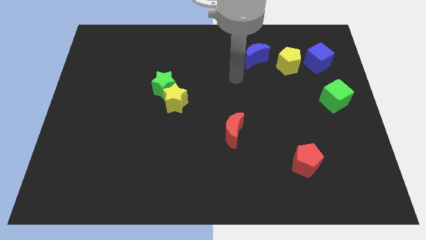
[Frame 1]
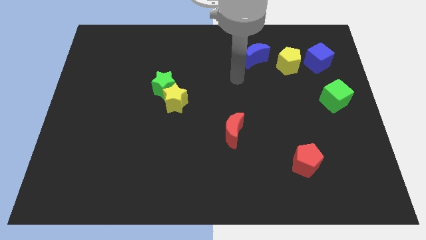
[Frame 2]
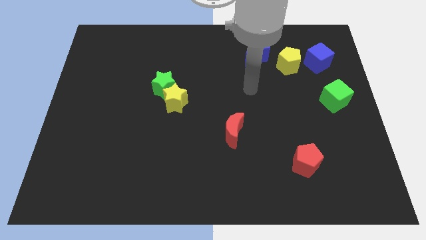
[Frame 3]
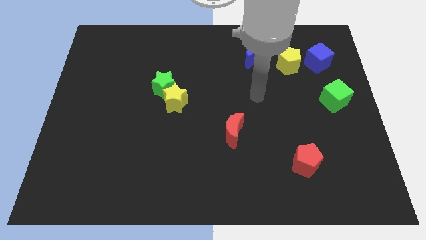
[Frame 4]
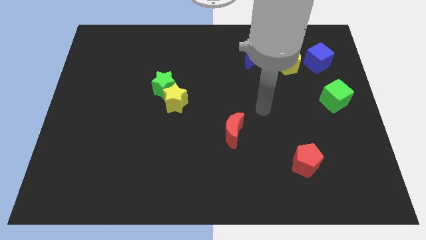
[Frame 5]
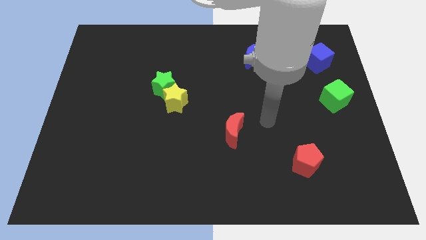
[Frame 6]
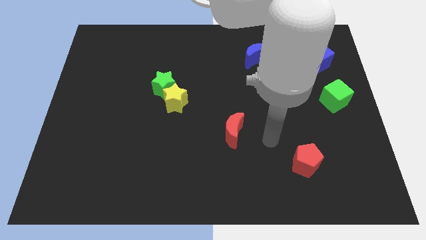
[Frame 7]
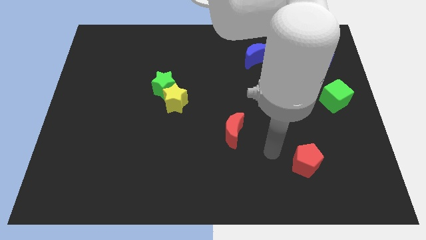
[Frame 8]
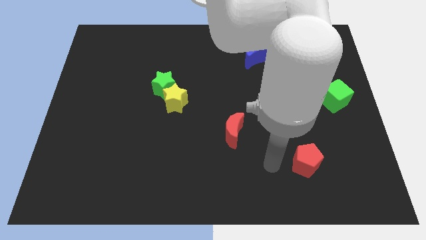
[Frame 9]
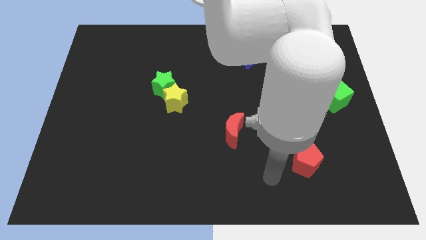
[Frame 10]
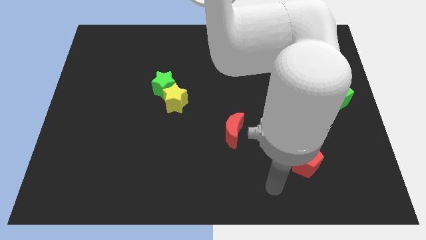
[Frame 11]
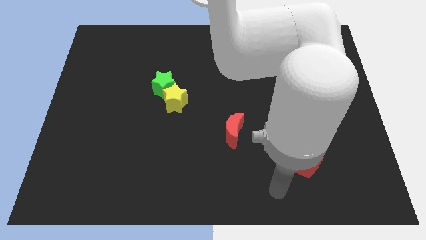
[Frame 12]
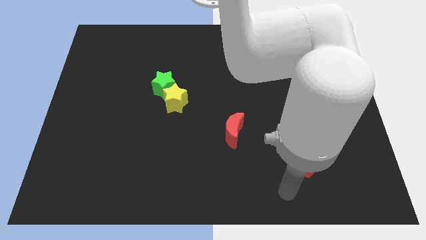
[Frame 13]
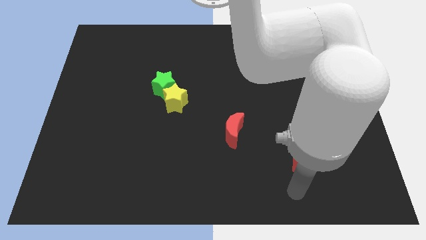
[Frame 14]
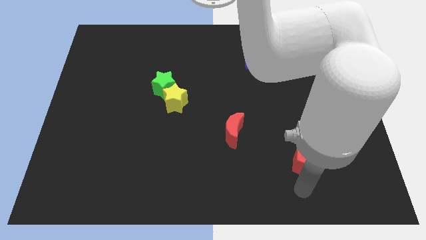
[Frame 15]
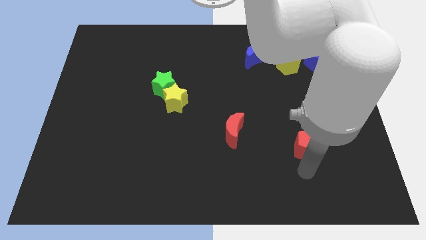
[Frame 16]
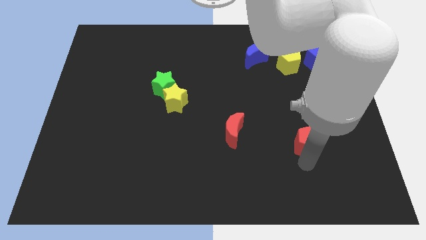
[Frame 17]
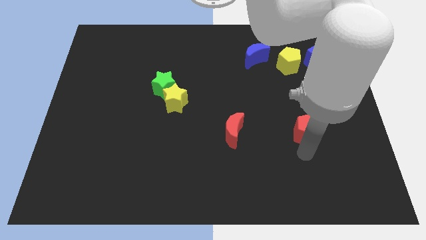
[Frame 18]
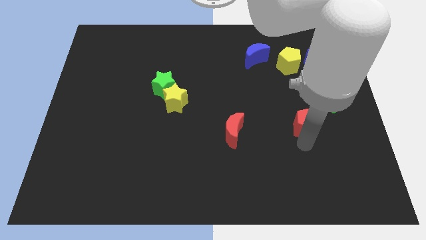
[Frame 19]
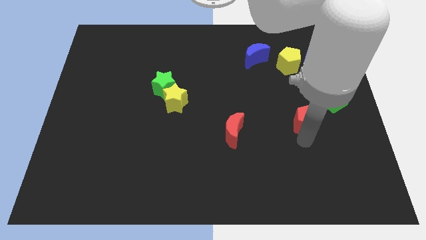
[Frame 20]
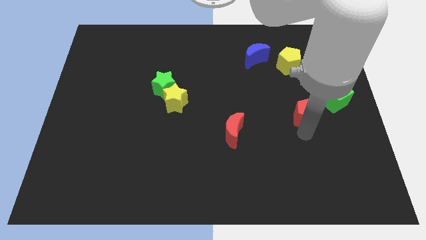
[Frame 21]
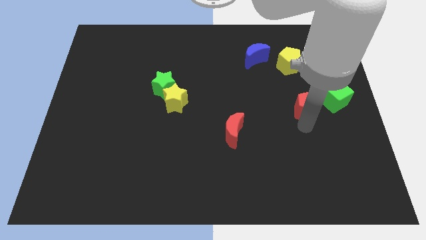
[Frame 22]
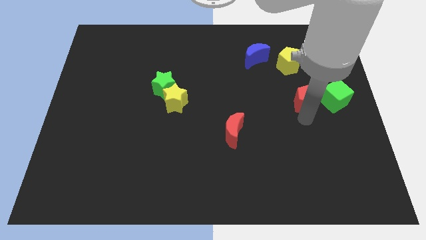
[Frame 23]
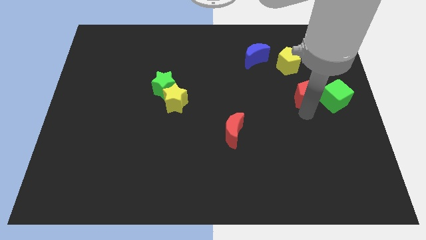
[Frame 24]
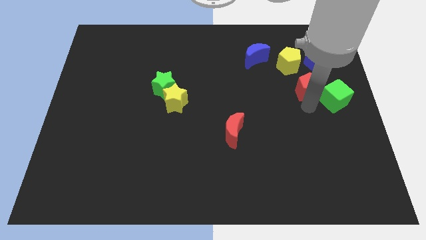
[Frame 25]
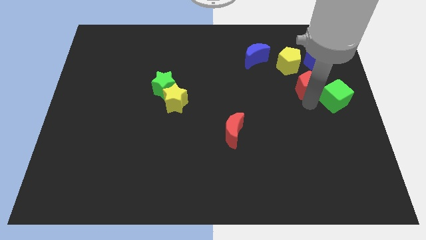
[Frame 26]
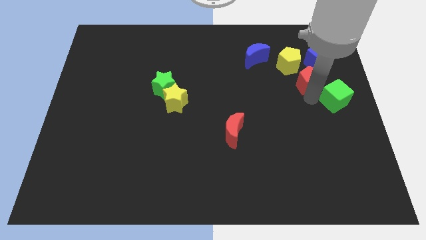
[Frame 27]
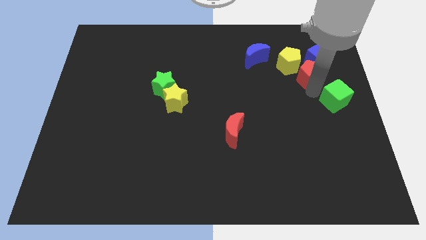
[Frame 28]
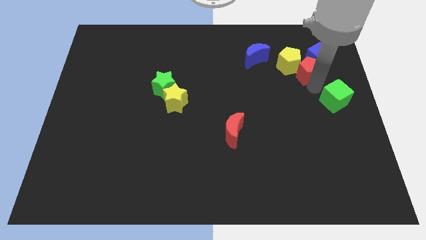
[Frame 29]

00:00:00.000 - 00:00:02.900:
put the red pentagon towards the blue cube

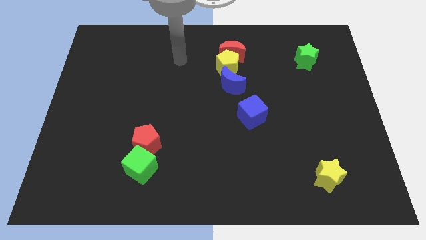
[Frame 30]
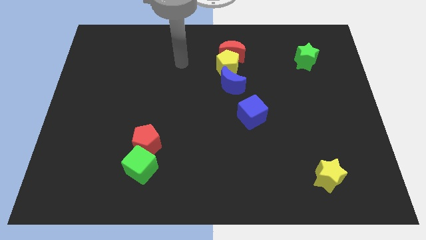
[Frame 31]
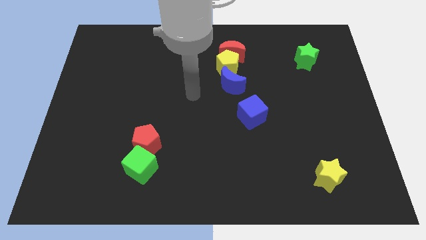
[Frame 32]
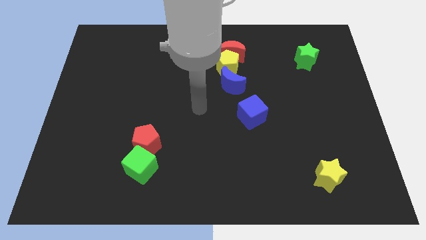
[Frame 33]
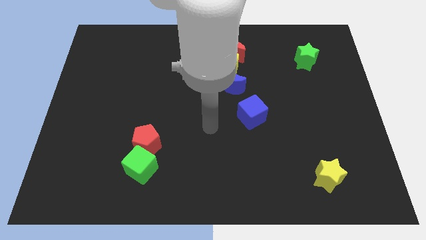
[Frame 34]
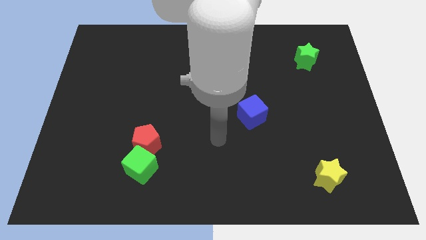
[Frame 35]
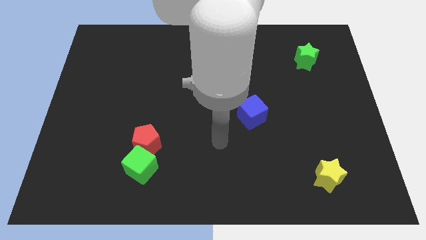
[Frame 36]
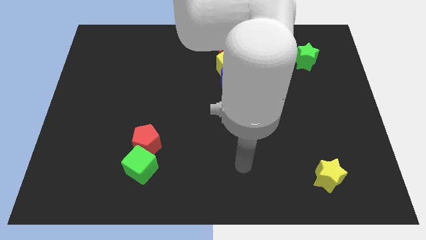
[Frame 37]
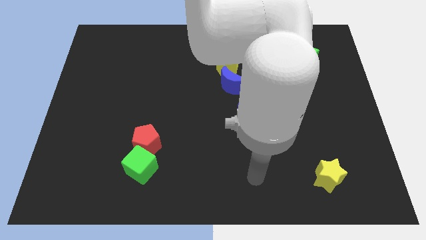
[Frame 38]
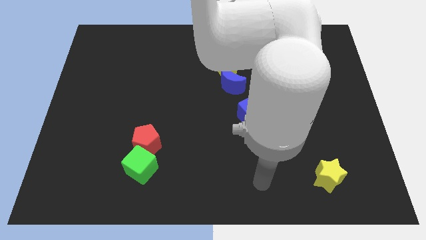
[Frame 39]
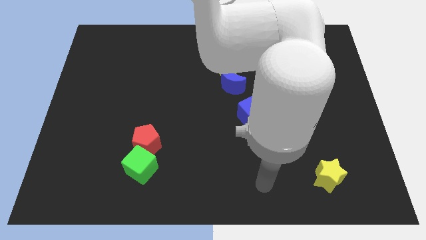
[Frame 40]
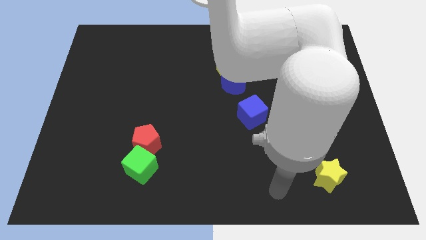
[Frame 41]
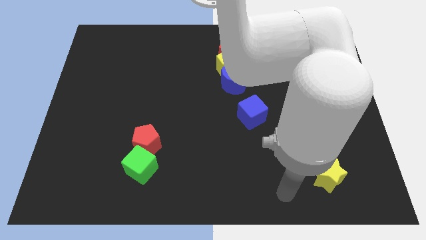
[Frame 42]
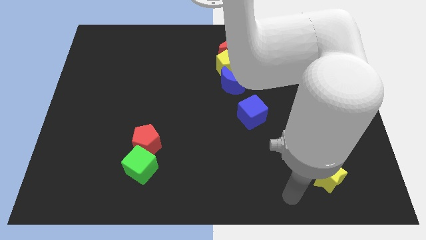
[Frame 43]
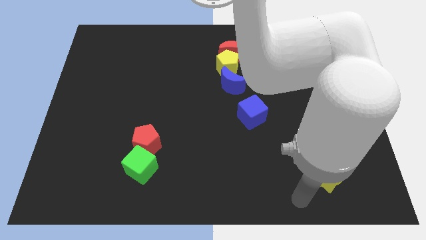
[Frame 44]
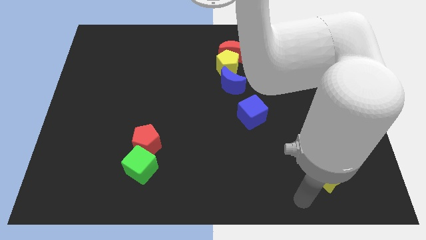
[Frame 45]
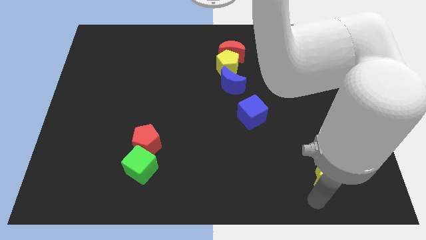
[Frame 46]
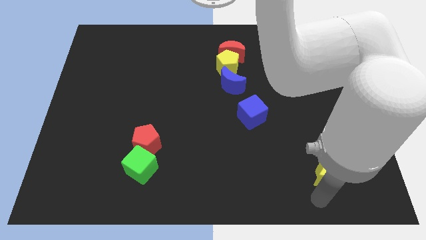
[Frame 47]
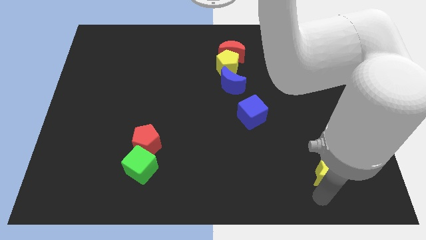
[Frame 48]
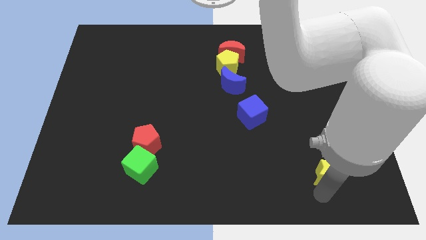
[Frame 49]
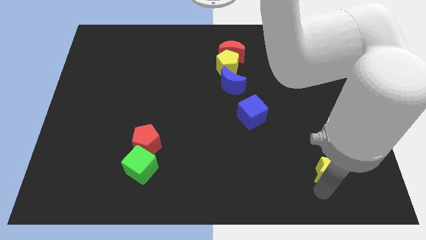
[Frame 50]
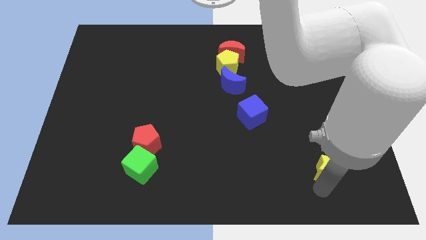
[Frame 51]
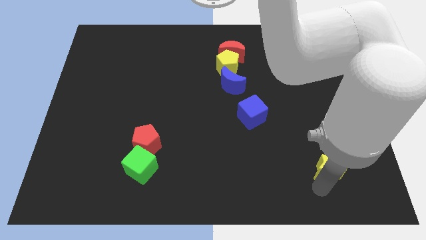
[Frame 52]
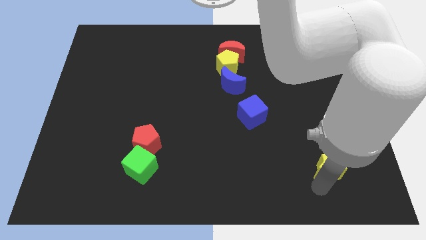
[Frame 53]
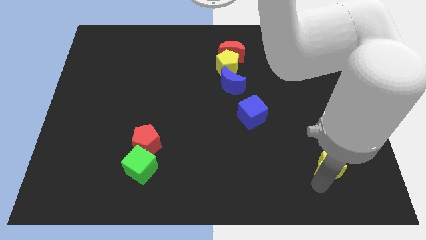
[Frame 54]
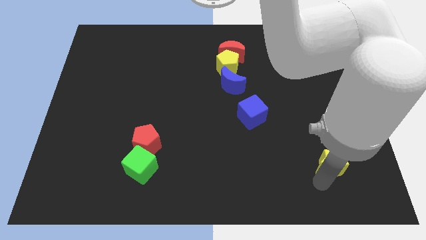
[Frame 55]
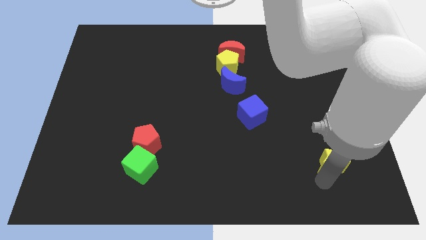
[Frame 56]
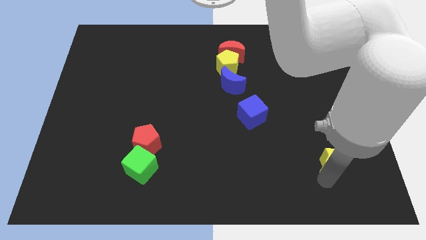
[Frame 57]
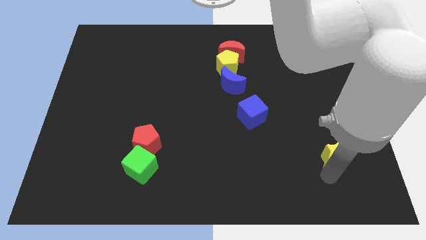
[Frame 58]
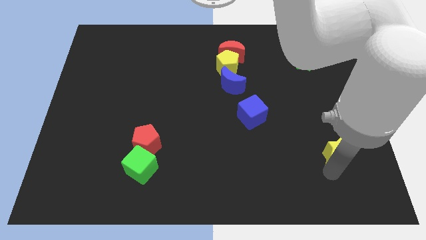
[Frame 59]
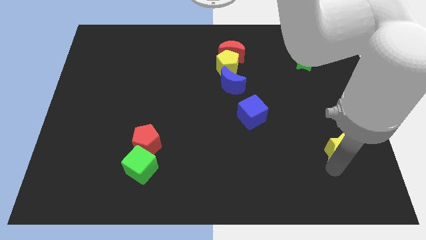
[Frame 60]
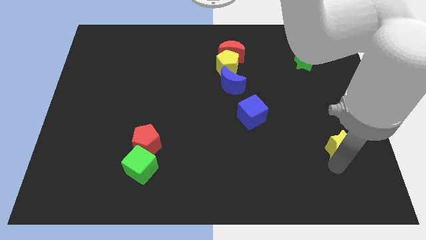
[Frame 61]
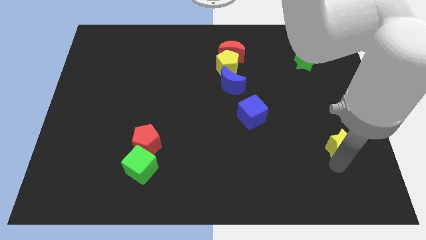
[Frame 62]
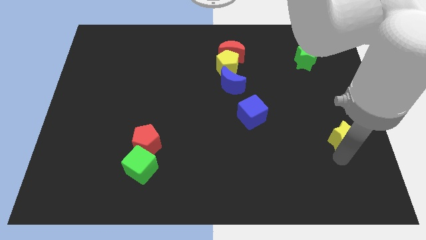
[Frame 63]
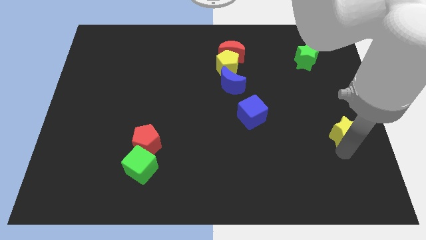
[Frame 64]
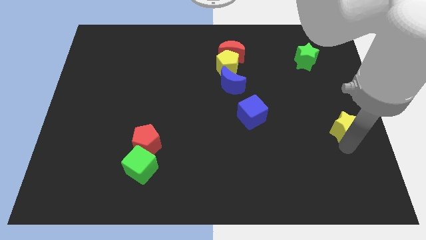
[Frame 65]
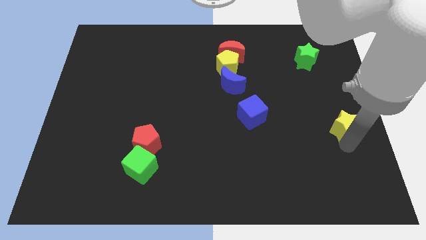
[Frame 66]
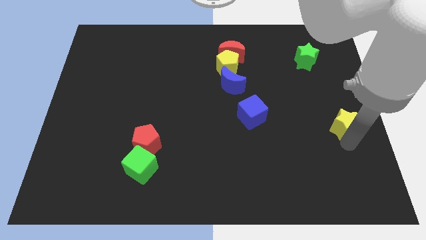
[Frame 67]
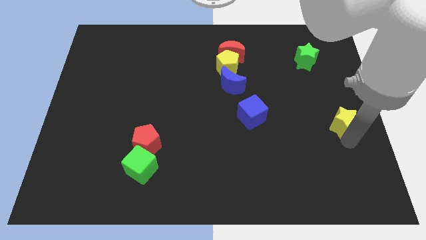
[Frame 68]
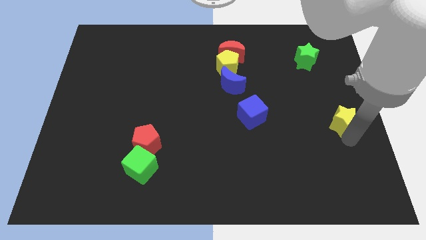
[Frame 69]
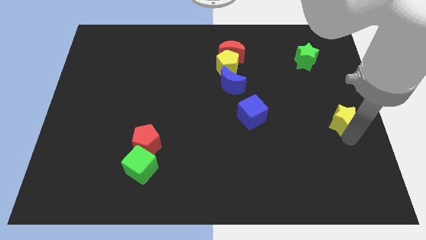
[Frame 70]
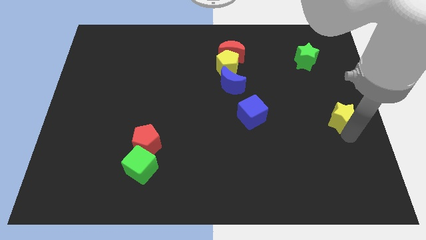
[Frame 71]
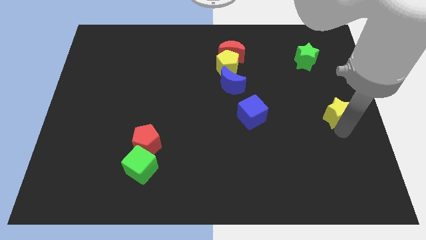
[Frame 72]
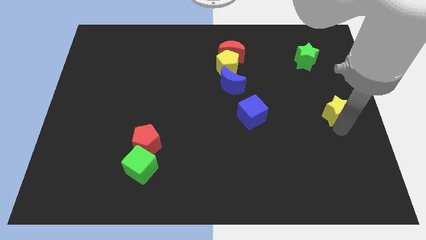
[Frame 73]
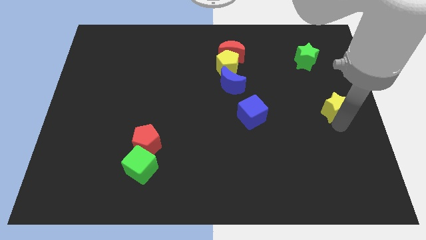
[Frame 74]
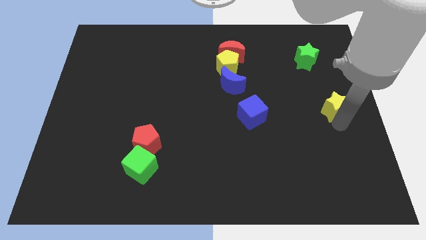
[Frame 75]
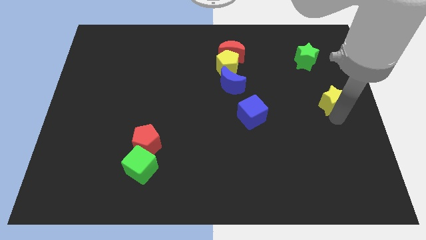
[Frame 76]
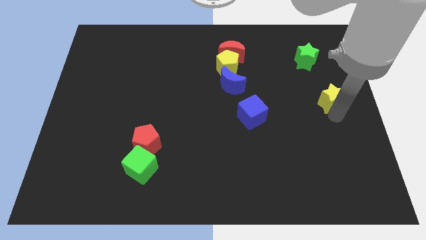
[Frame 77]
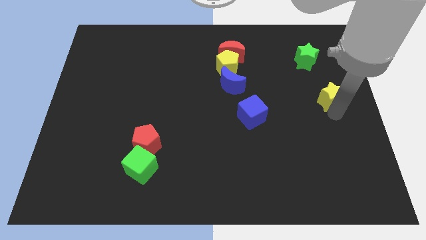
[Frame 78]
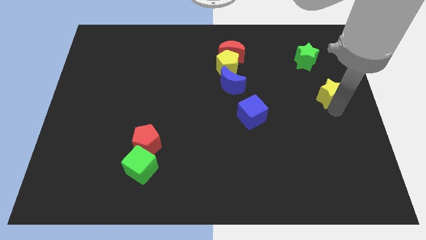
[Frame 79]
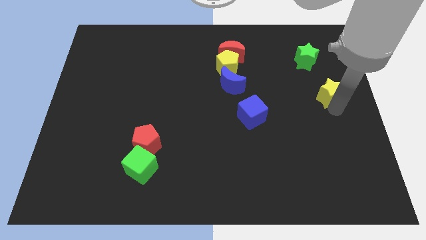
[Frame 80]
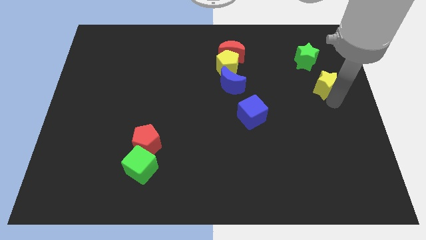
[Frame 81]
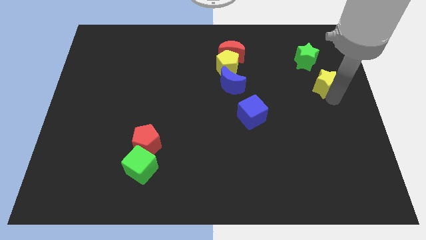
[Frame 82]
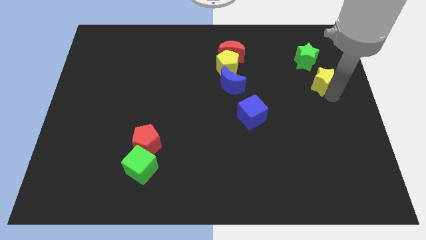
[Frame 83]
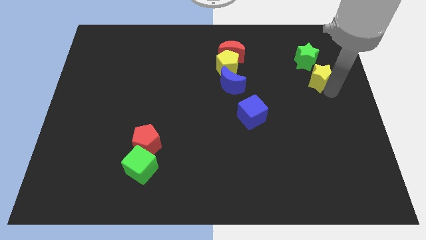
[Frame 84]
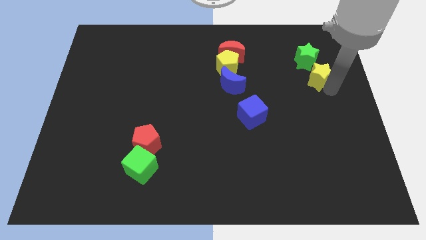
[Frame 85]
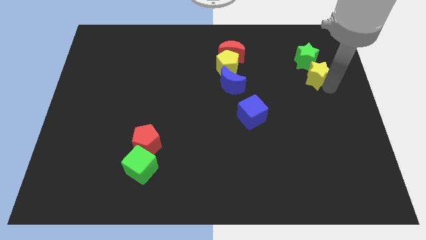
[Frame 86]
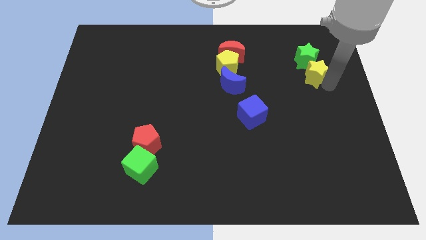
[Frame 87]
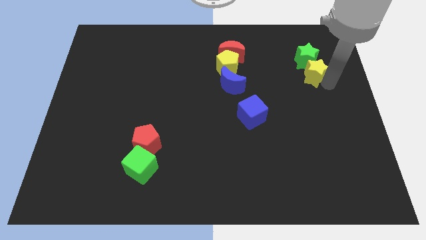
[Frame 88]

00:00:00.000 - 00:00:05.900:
move the yellow star towards the green star
